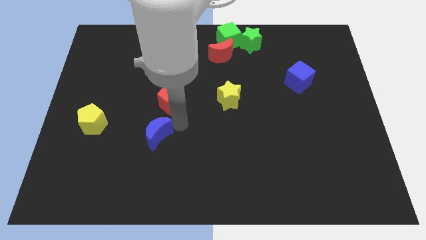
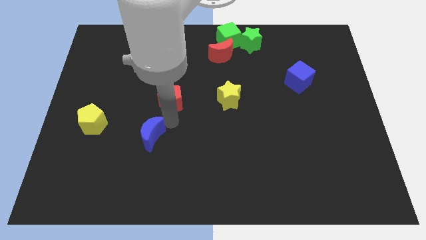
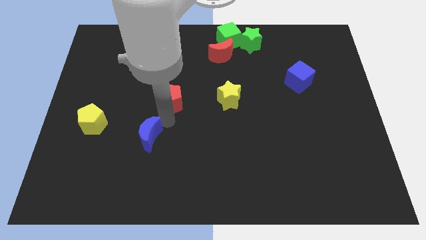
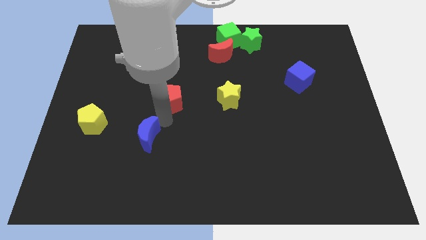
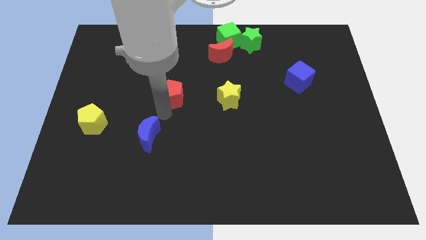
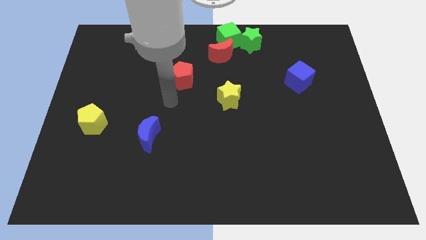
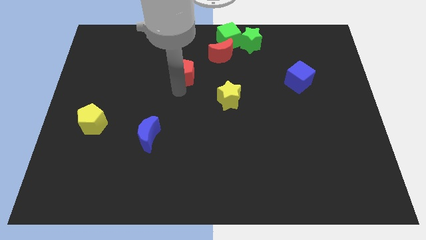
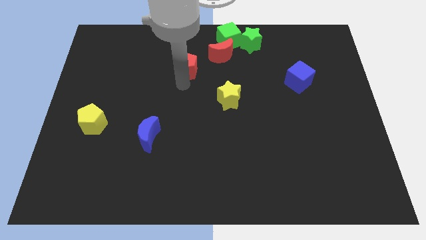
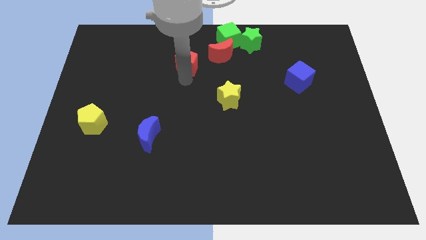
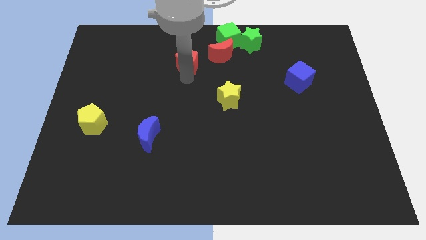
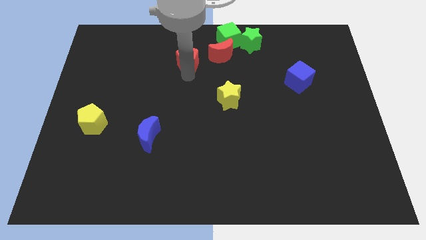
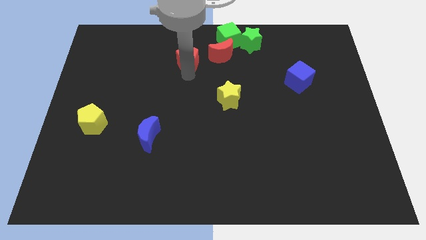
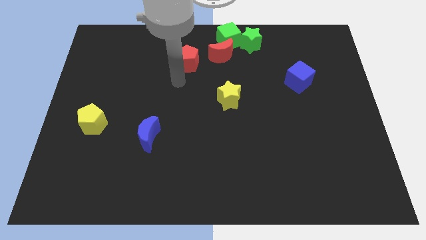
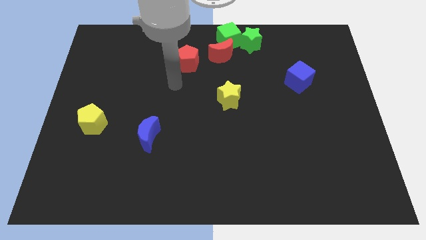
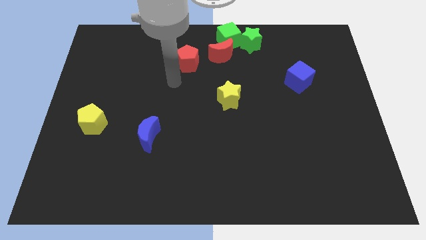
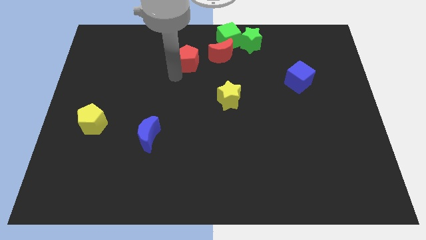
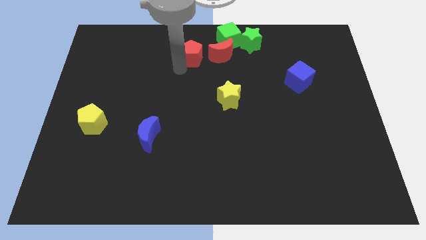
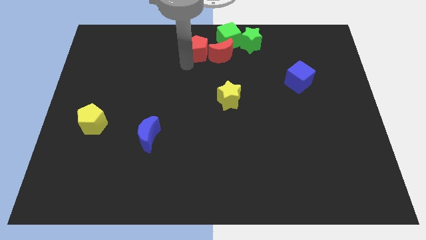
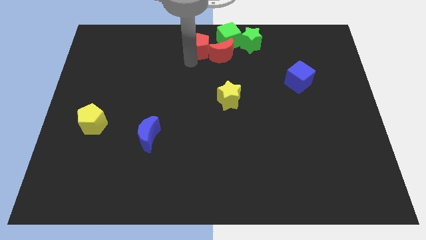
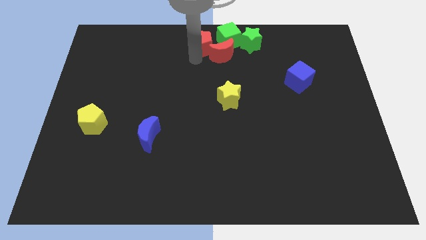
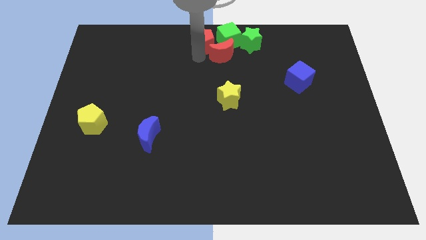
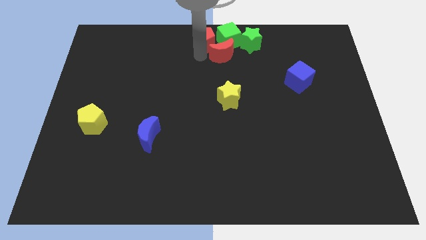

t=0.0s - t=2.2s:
slide red pentagon towards top center

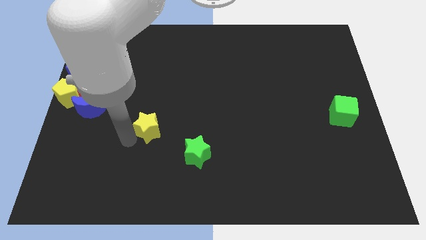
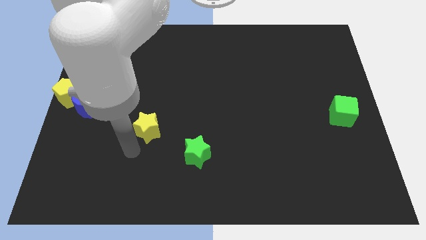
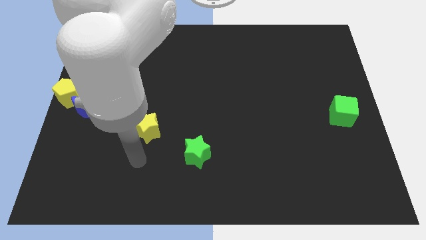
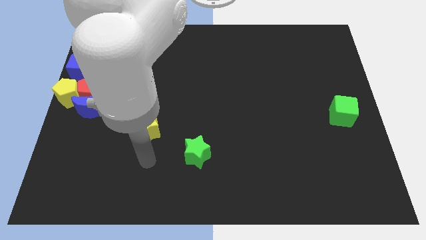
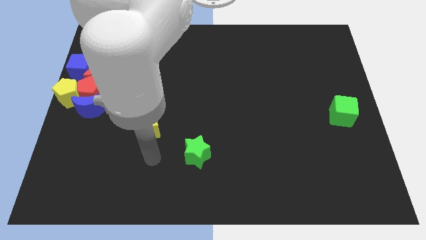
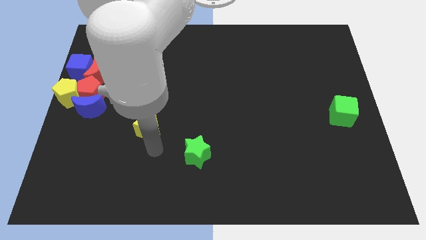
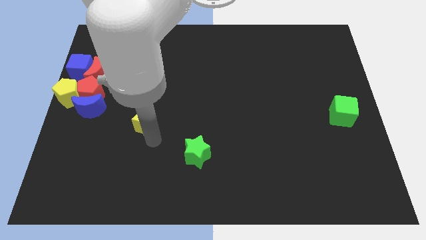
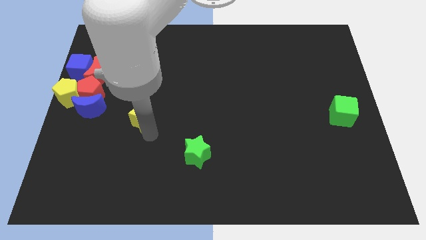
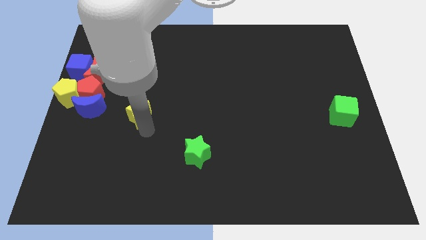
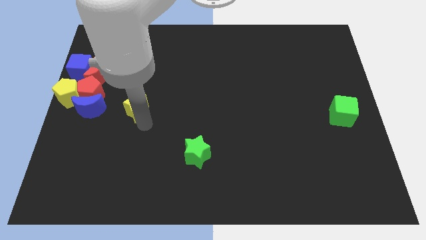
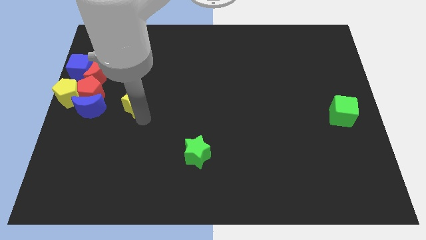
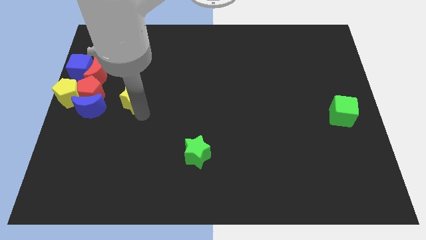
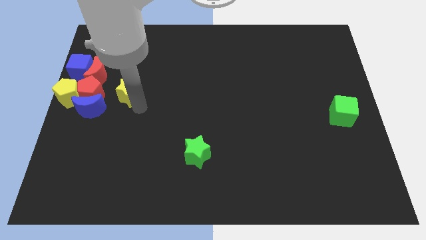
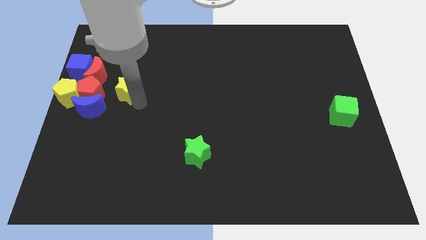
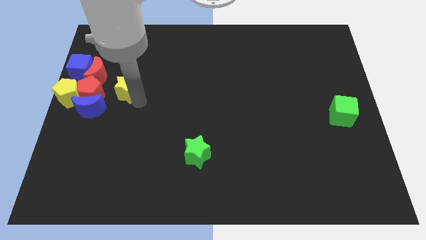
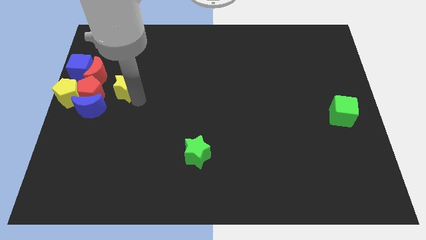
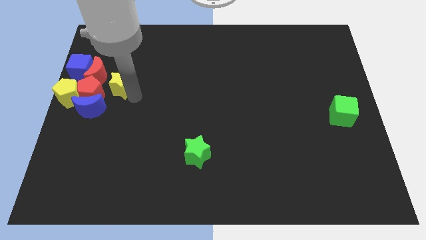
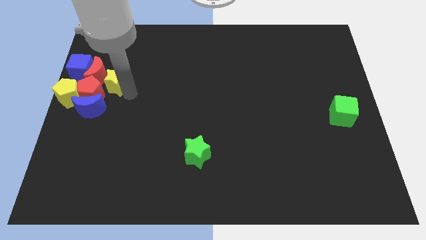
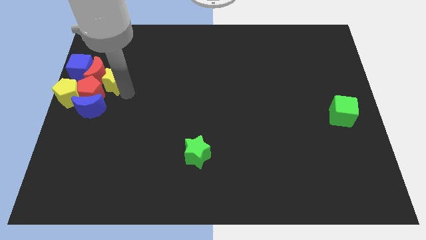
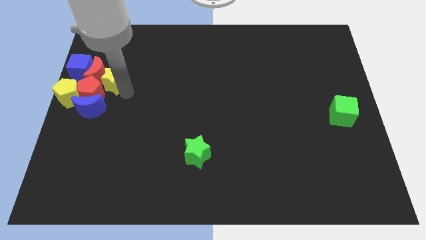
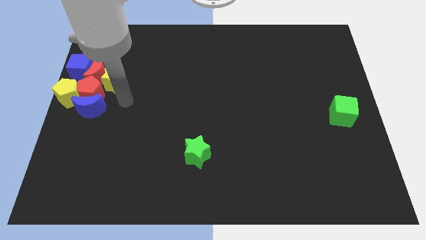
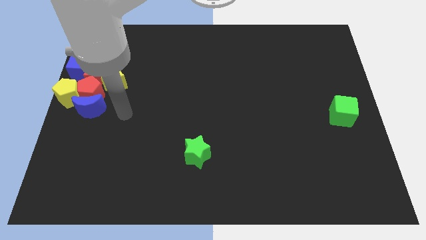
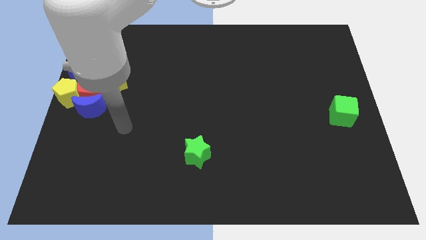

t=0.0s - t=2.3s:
move the yellow star to the right of the red blocks

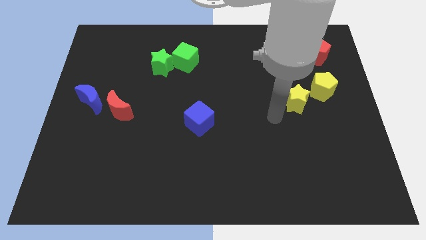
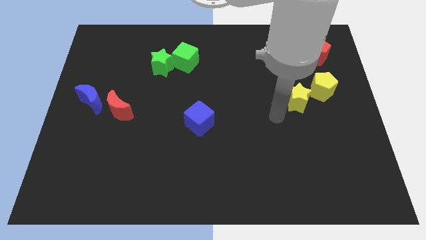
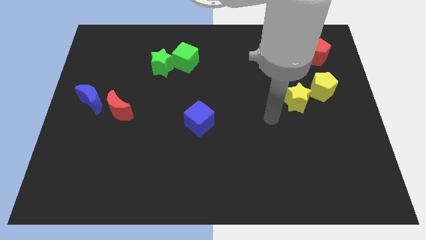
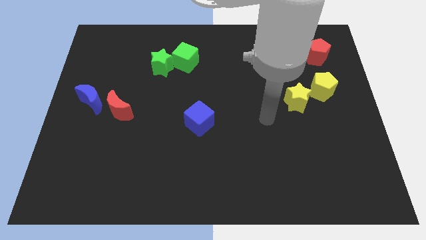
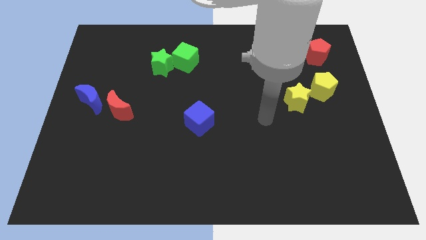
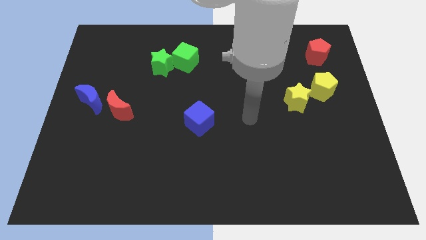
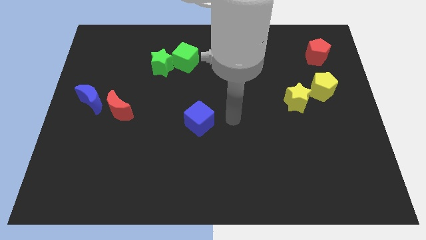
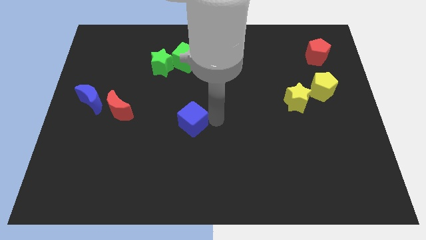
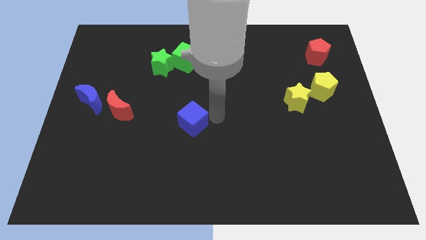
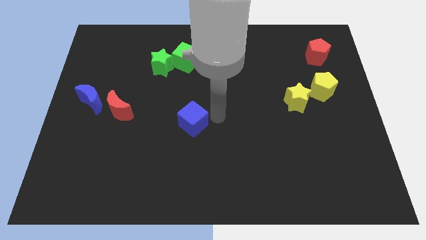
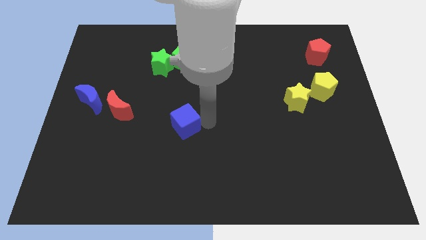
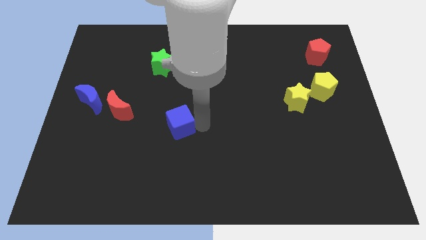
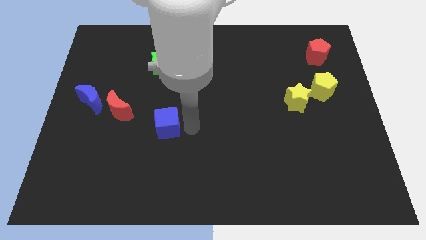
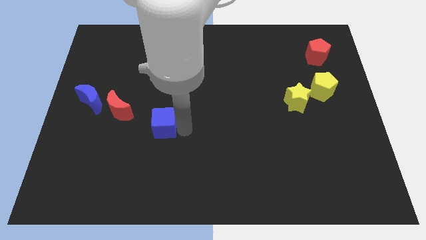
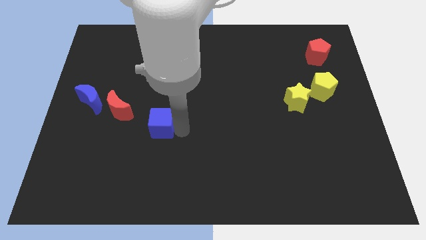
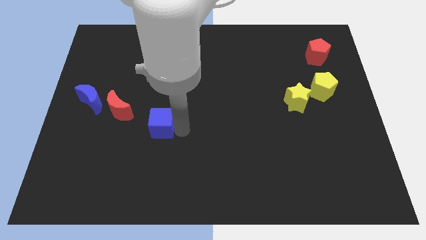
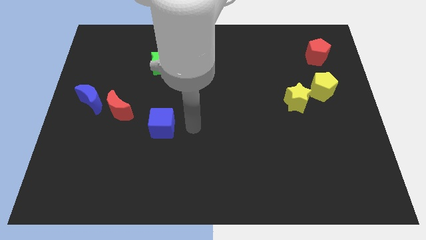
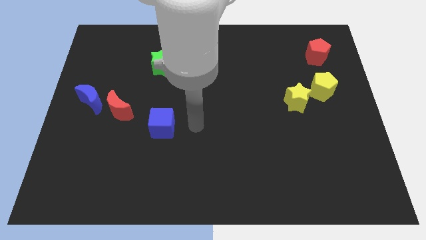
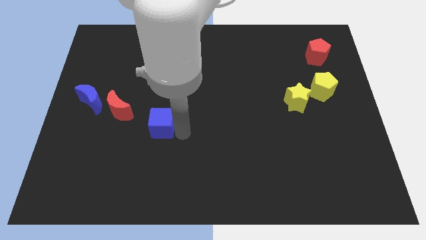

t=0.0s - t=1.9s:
place the blue cube below the green star

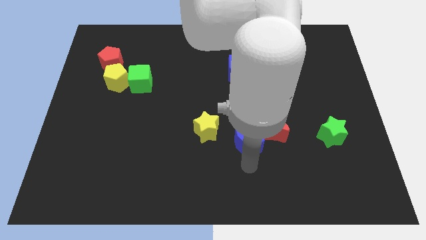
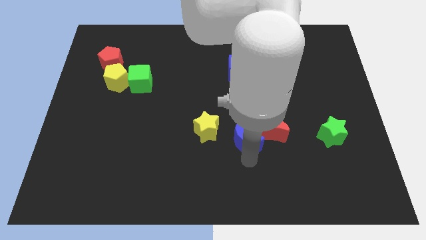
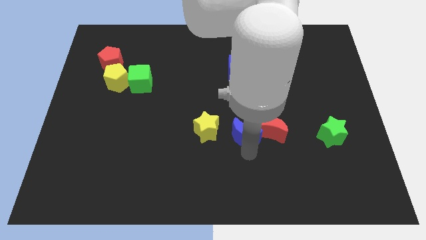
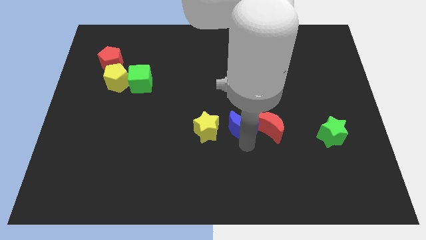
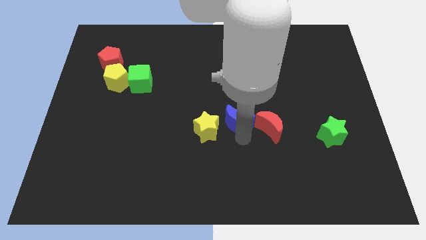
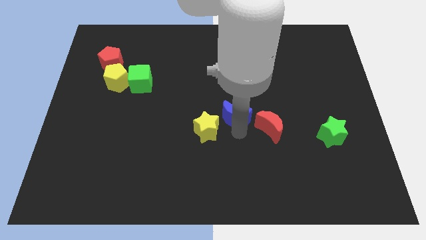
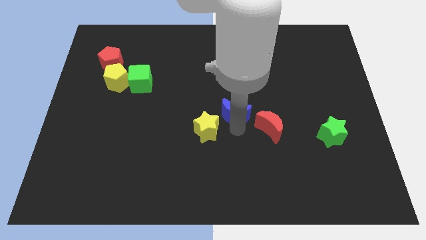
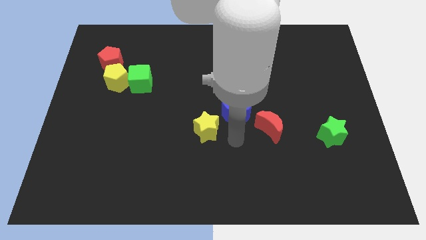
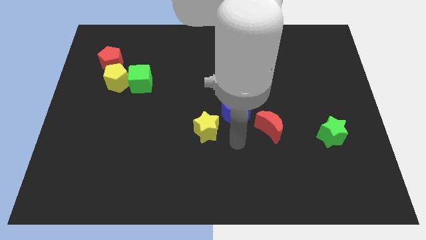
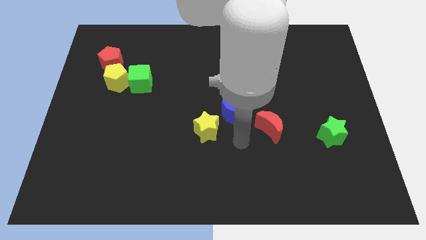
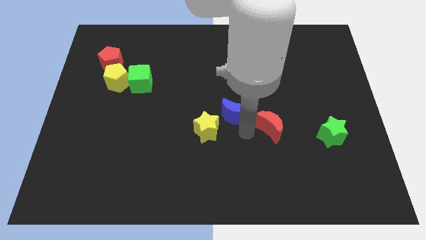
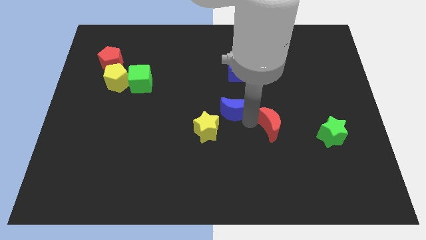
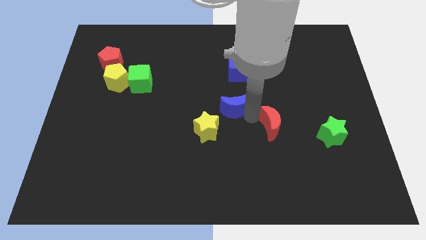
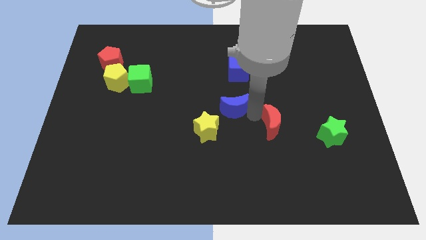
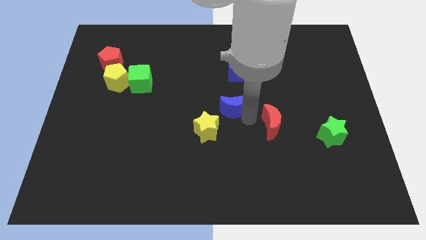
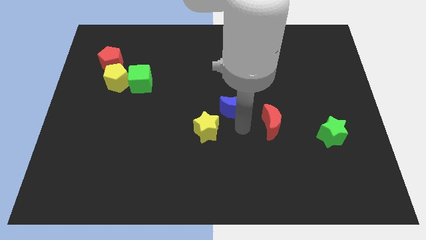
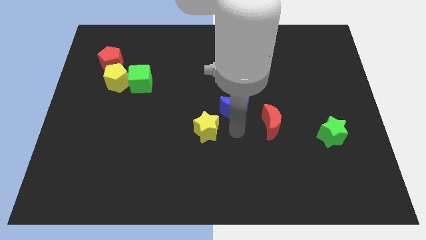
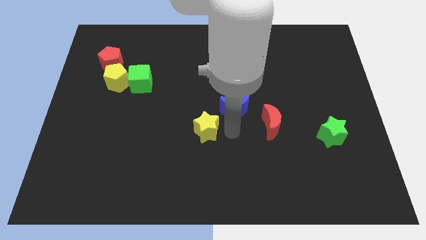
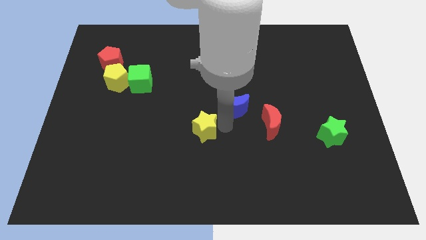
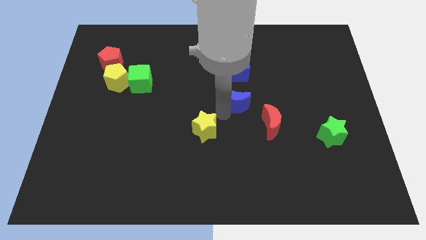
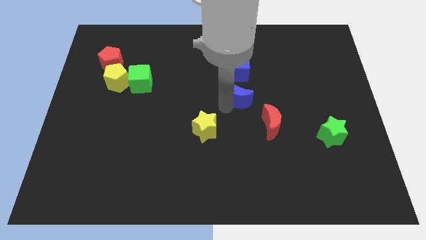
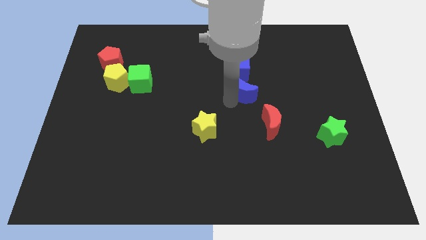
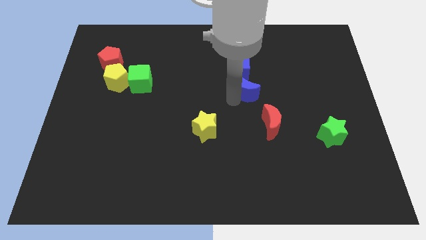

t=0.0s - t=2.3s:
place the blue crescent to the bottom of the blue cube

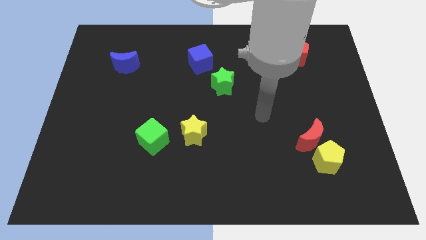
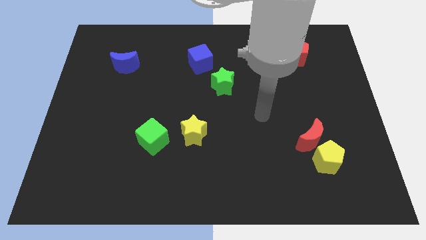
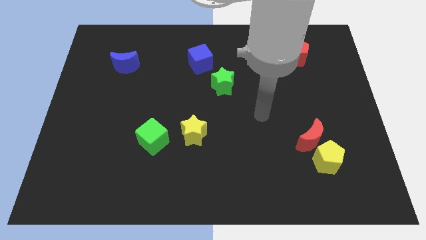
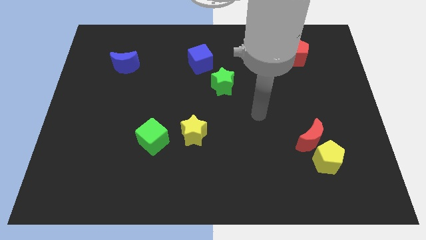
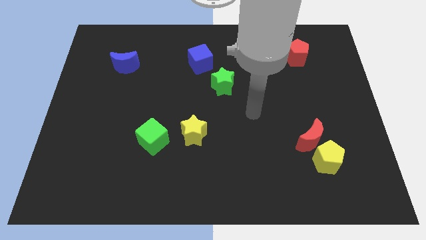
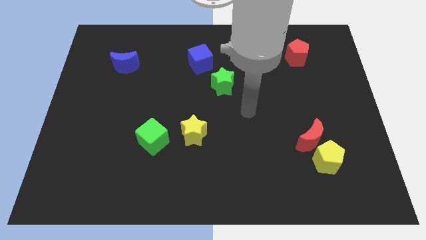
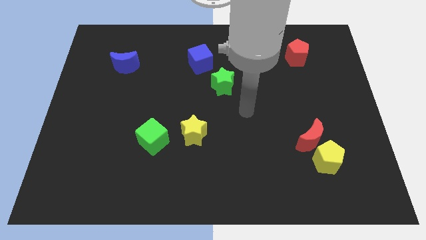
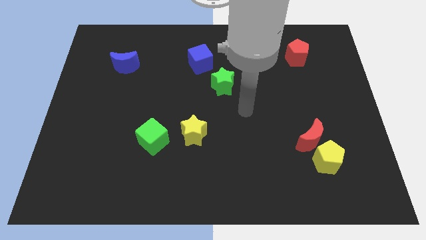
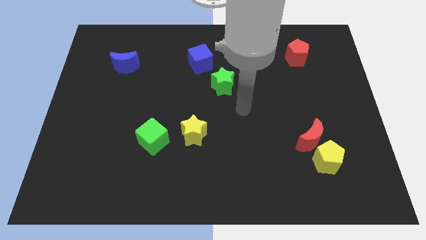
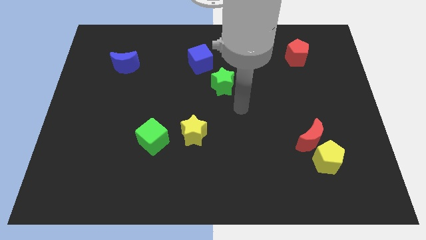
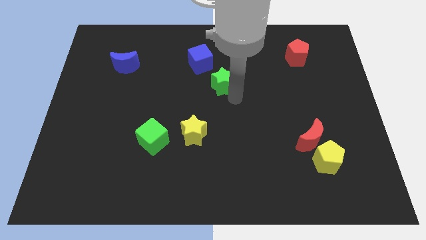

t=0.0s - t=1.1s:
move your arm towards the green star
